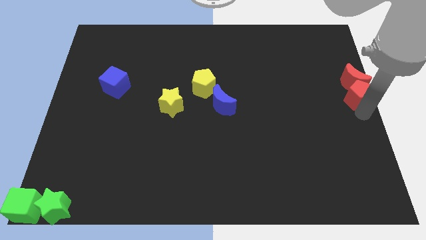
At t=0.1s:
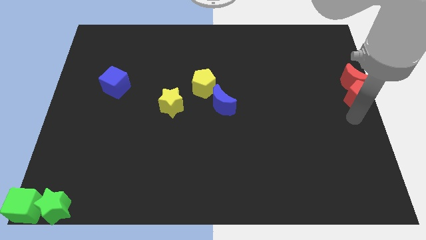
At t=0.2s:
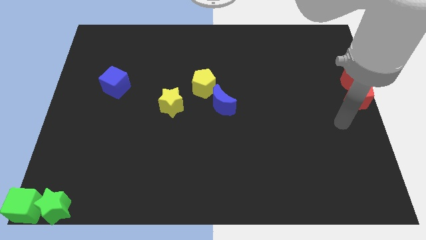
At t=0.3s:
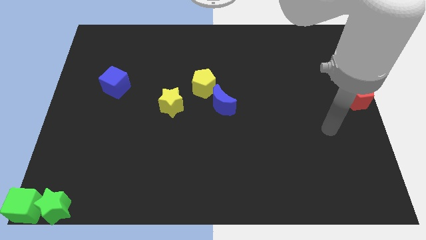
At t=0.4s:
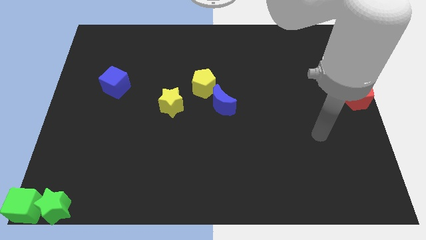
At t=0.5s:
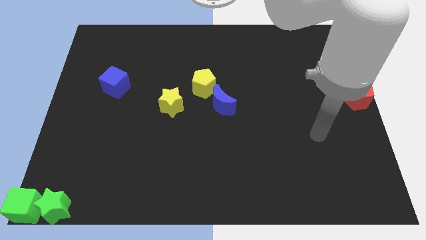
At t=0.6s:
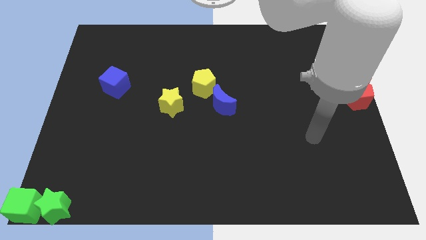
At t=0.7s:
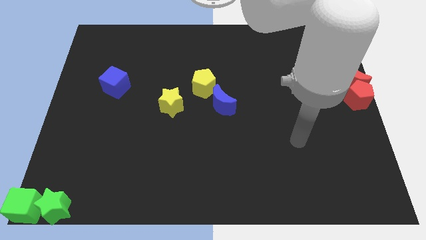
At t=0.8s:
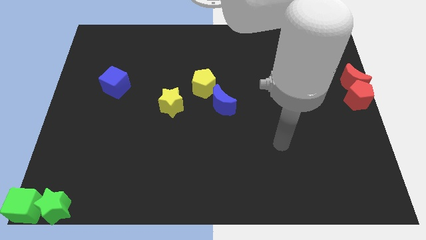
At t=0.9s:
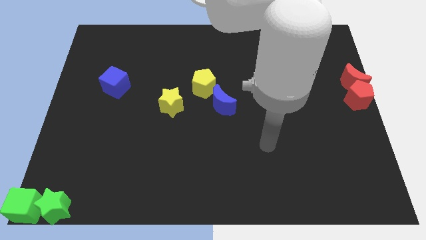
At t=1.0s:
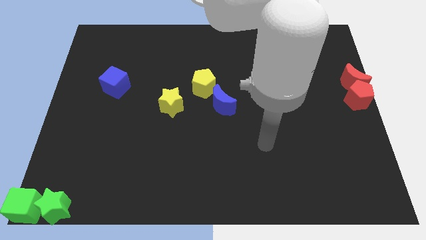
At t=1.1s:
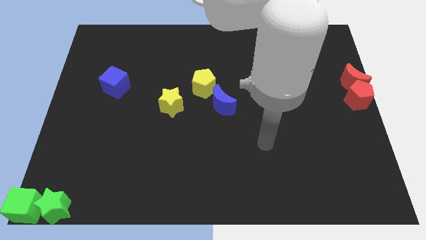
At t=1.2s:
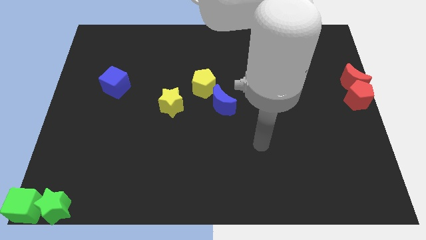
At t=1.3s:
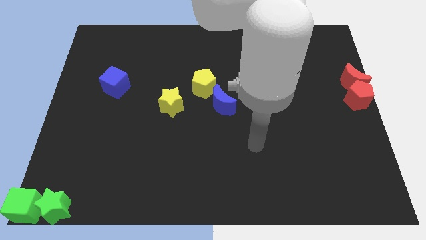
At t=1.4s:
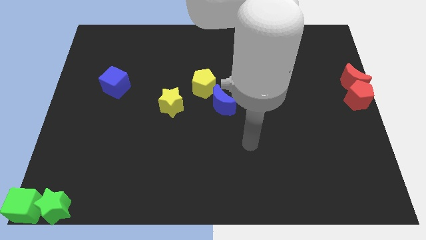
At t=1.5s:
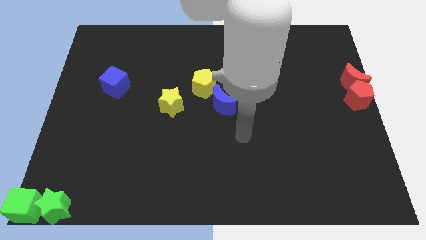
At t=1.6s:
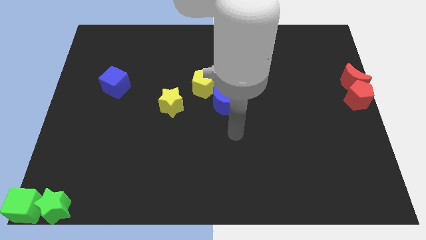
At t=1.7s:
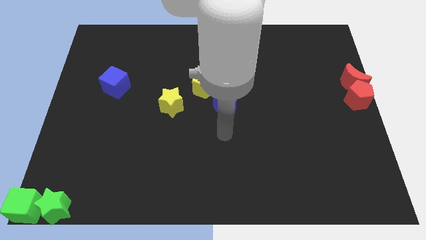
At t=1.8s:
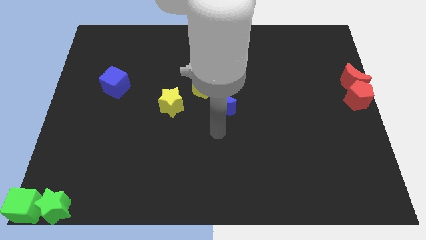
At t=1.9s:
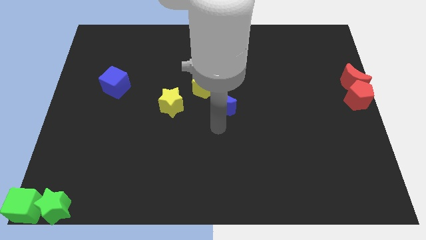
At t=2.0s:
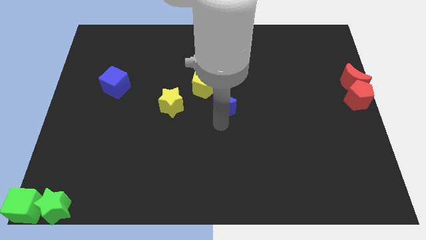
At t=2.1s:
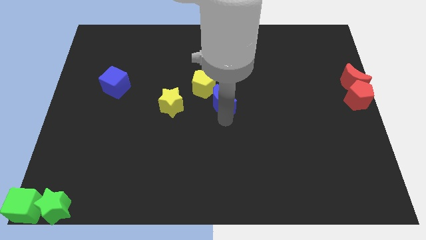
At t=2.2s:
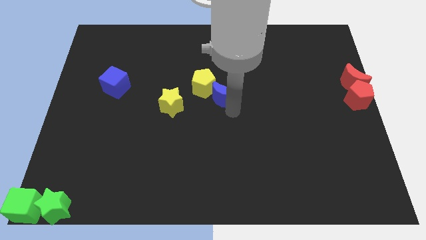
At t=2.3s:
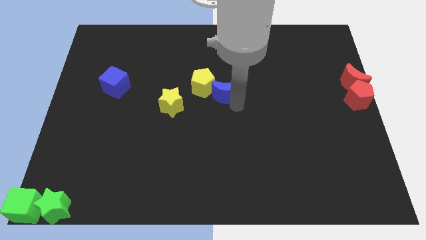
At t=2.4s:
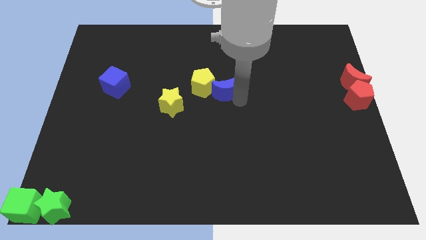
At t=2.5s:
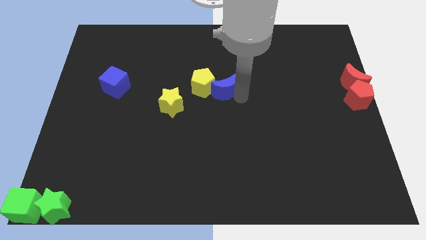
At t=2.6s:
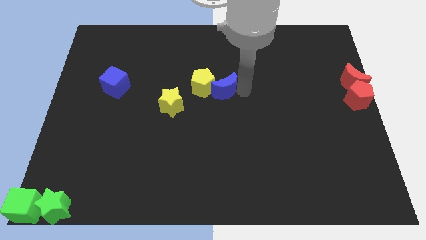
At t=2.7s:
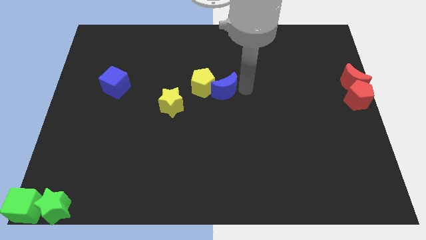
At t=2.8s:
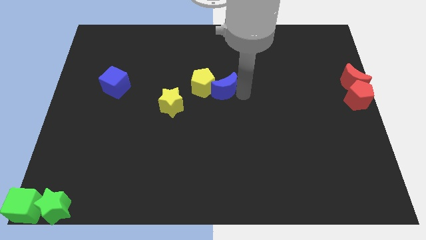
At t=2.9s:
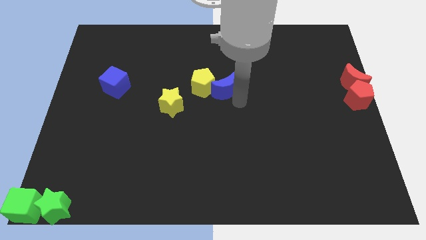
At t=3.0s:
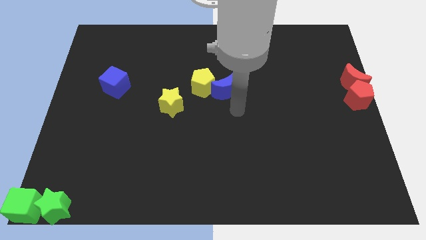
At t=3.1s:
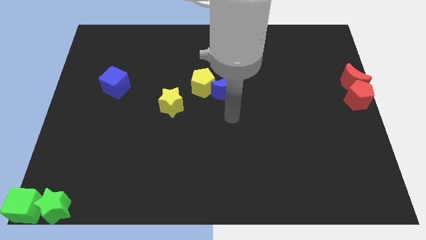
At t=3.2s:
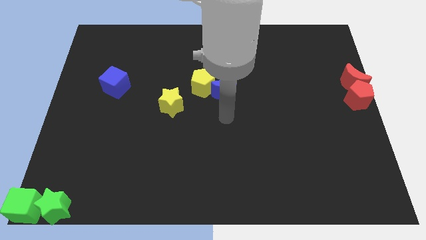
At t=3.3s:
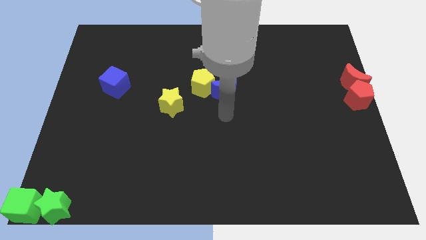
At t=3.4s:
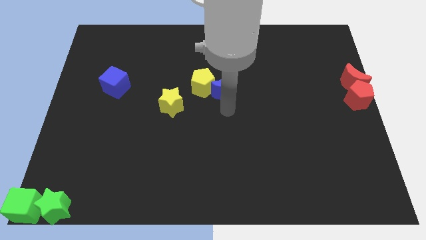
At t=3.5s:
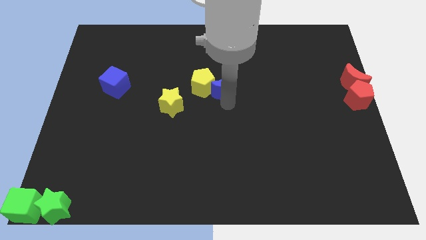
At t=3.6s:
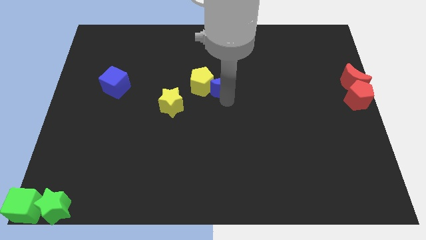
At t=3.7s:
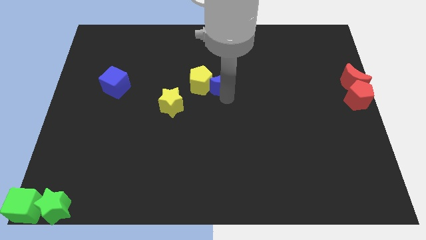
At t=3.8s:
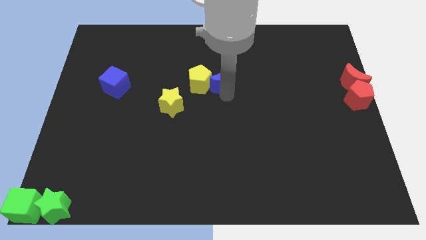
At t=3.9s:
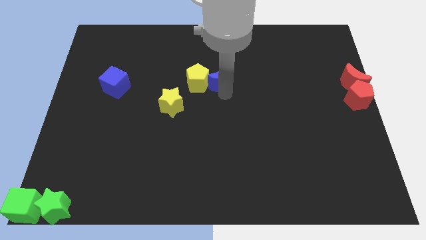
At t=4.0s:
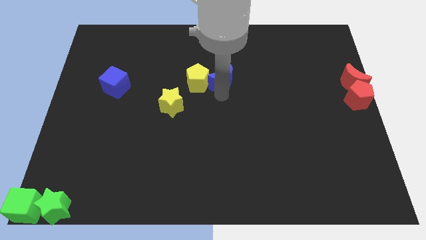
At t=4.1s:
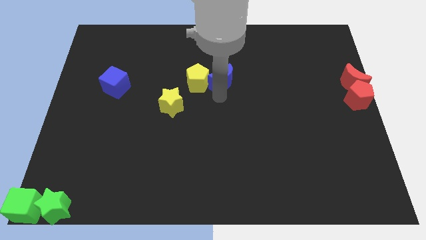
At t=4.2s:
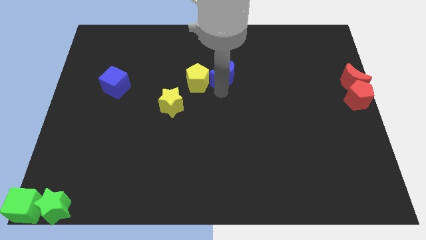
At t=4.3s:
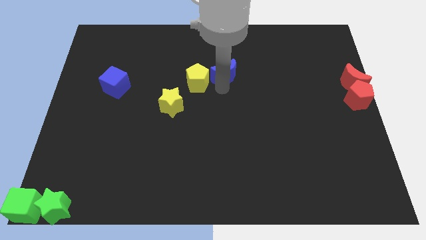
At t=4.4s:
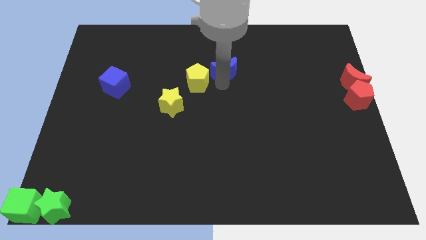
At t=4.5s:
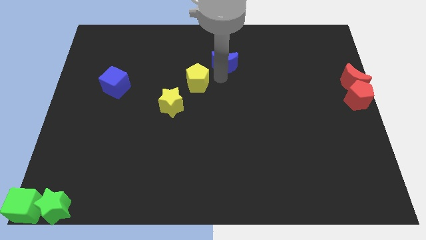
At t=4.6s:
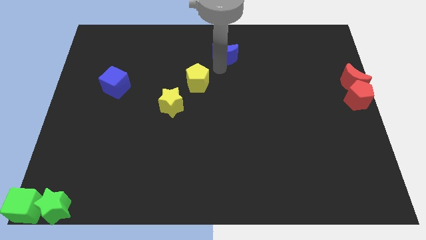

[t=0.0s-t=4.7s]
separate the blue crescent from the yellow pentagon

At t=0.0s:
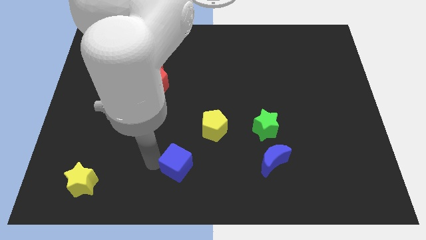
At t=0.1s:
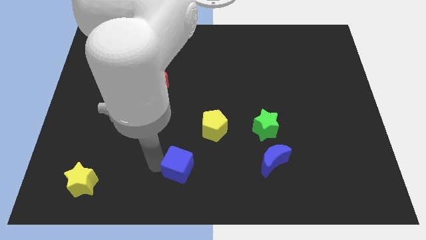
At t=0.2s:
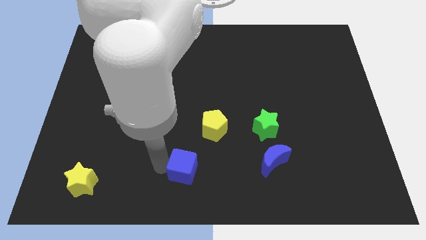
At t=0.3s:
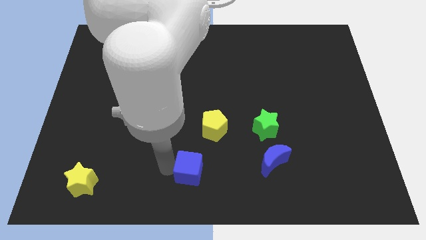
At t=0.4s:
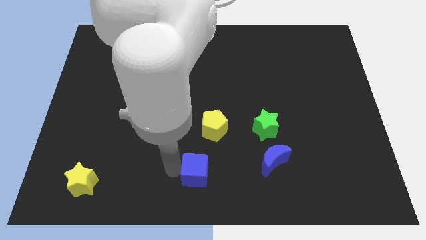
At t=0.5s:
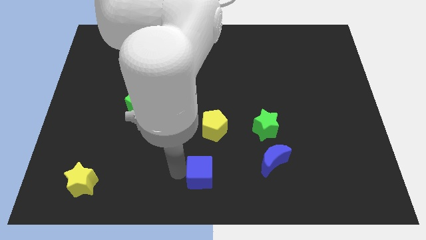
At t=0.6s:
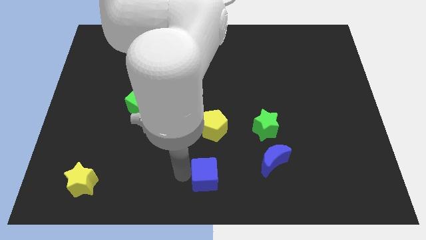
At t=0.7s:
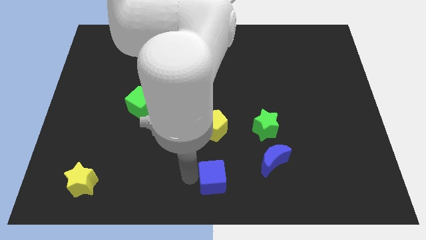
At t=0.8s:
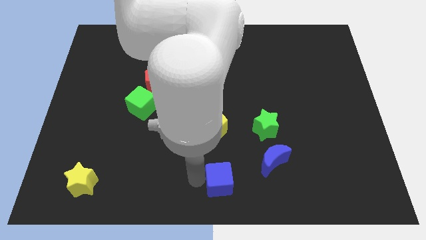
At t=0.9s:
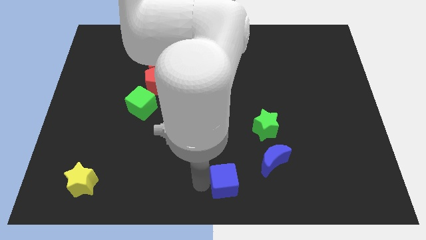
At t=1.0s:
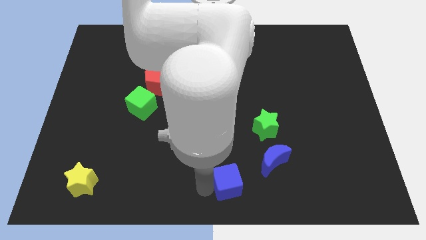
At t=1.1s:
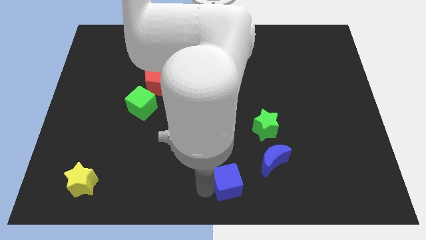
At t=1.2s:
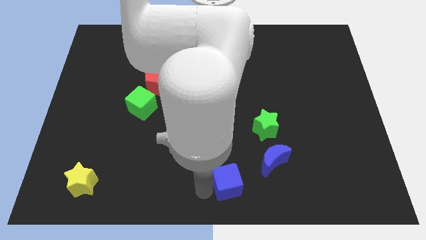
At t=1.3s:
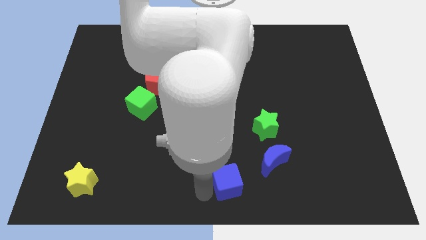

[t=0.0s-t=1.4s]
move the blue cube to the bottom center of the board

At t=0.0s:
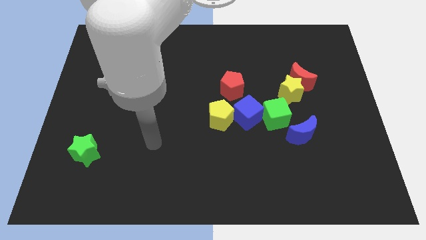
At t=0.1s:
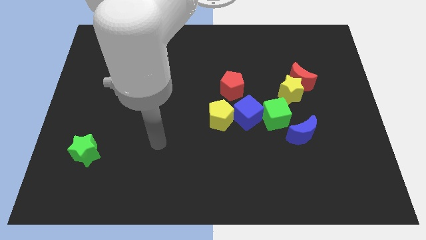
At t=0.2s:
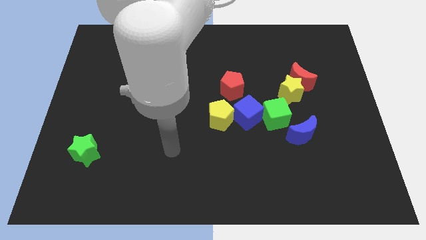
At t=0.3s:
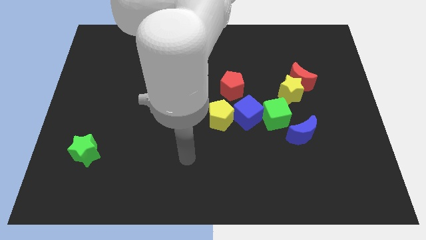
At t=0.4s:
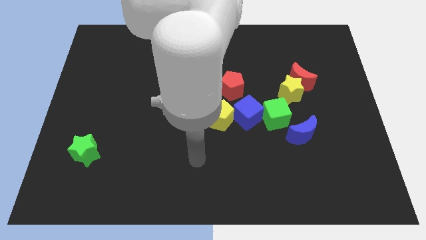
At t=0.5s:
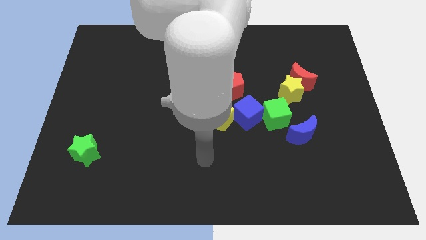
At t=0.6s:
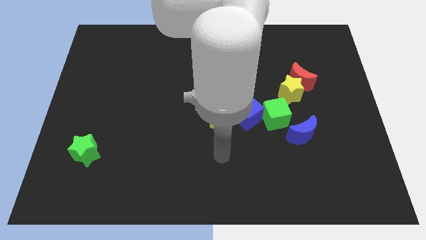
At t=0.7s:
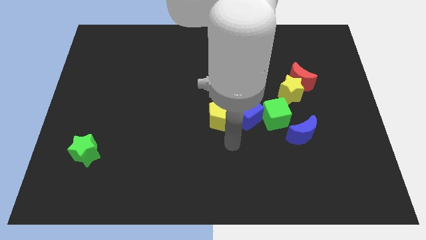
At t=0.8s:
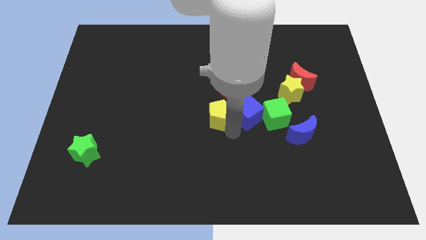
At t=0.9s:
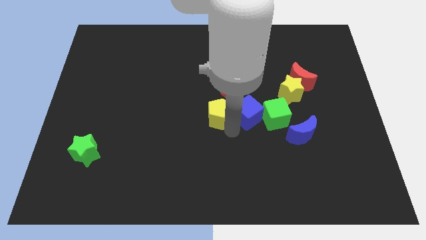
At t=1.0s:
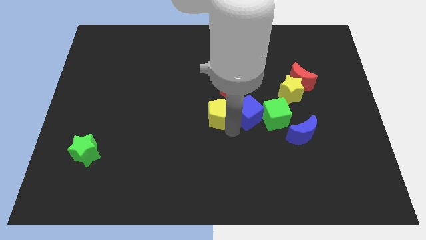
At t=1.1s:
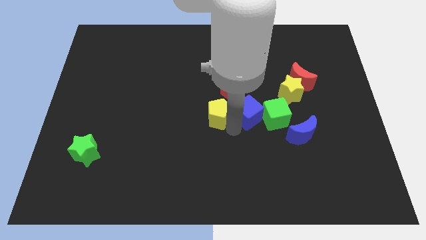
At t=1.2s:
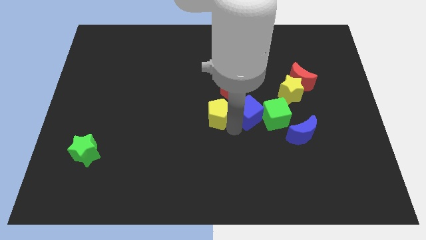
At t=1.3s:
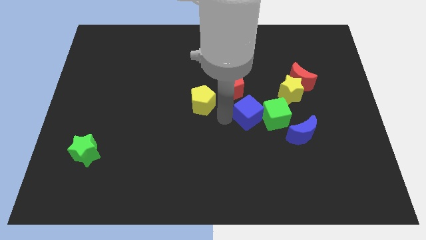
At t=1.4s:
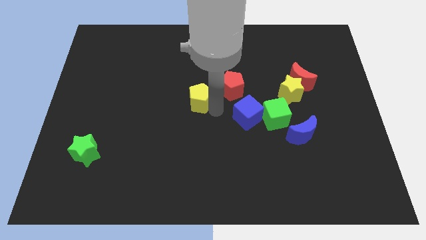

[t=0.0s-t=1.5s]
separate yellow pentagon from the blue cube

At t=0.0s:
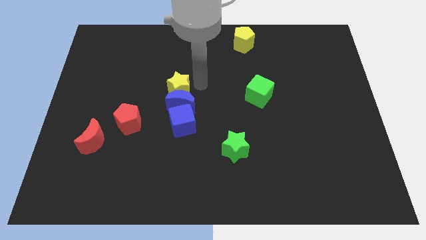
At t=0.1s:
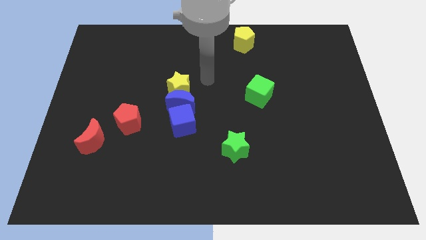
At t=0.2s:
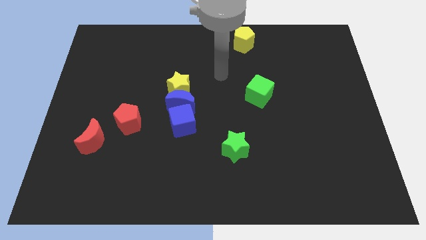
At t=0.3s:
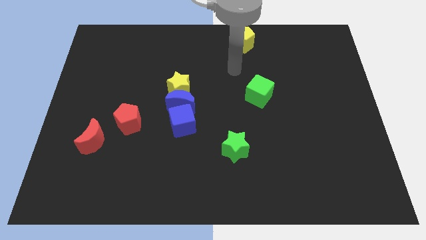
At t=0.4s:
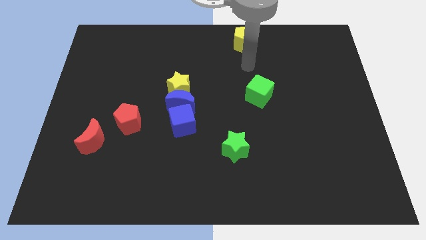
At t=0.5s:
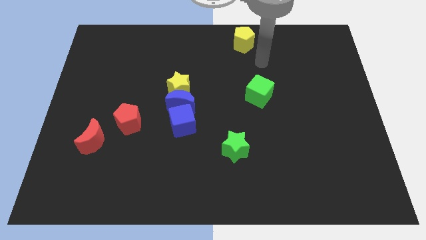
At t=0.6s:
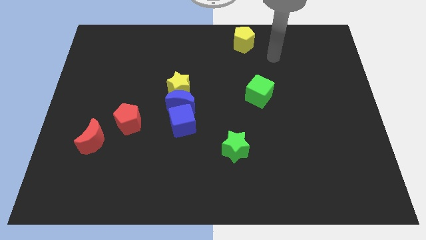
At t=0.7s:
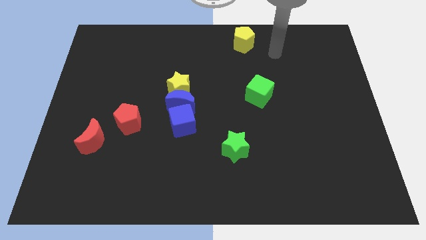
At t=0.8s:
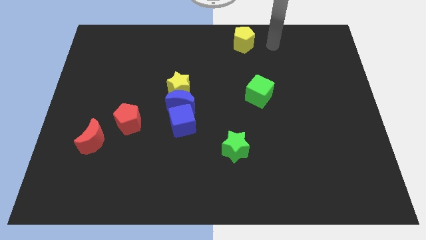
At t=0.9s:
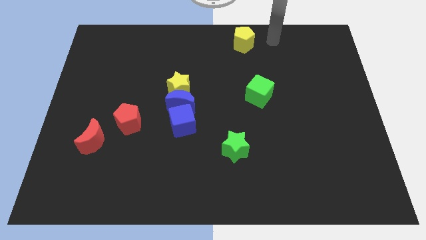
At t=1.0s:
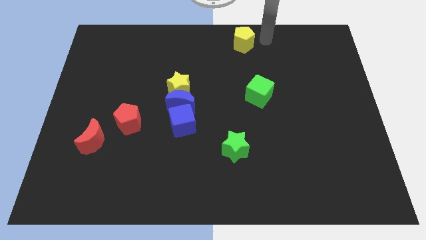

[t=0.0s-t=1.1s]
point your arm to the right side of yellow pentagon

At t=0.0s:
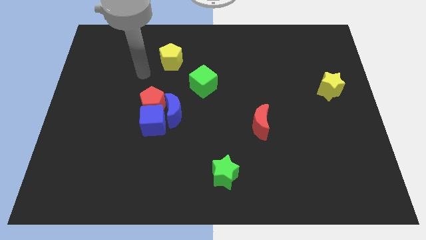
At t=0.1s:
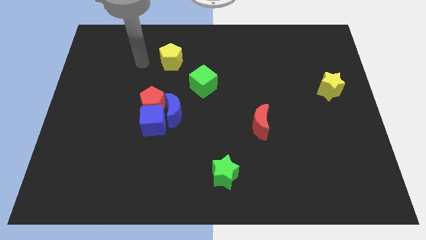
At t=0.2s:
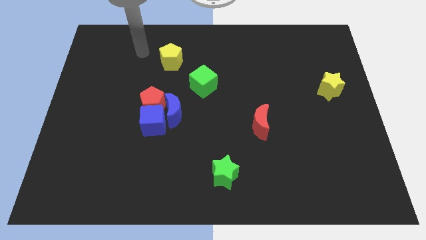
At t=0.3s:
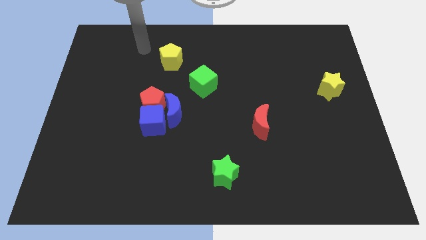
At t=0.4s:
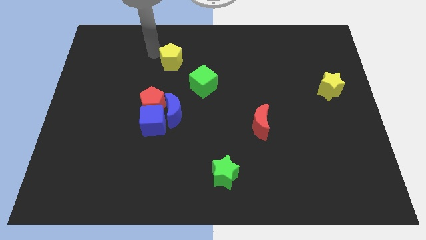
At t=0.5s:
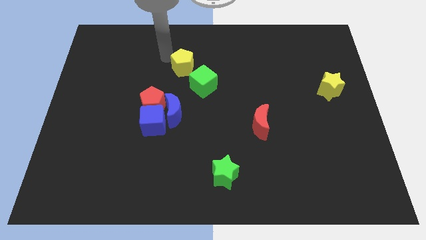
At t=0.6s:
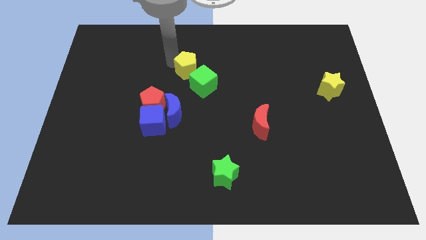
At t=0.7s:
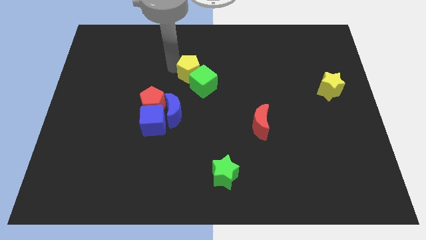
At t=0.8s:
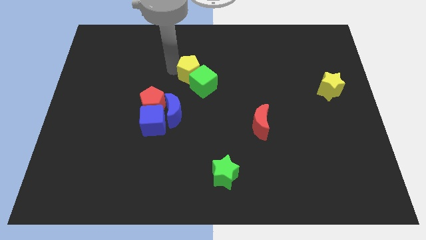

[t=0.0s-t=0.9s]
push the yellow pentagon towards the green cube
